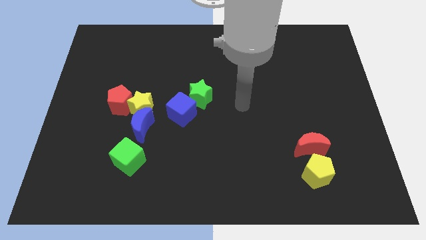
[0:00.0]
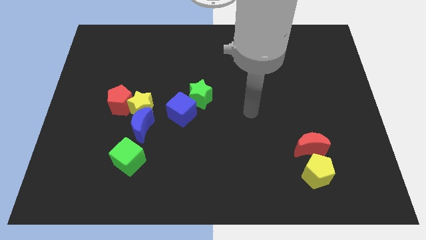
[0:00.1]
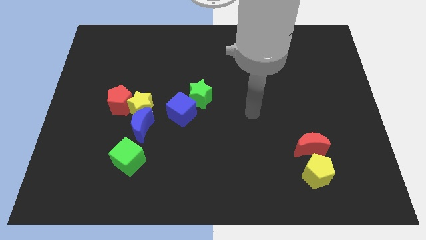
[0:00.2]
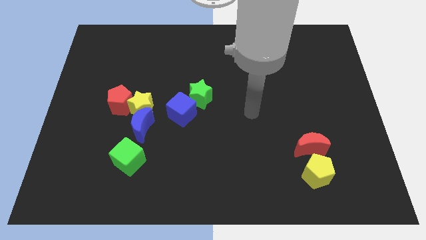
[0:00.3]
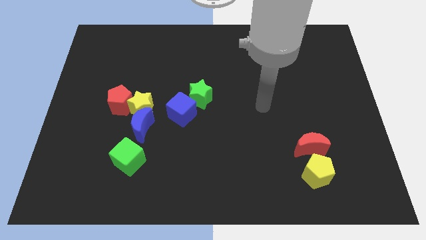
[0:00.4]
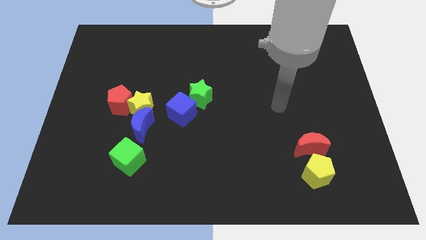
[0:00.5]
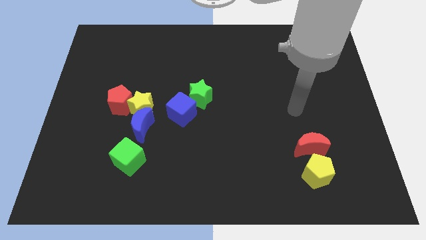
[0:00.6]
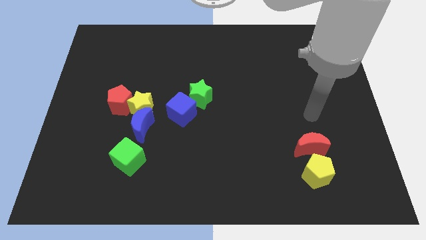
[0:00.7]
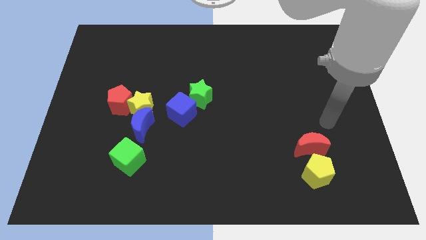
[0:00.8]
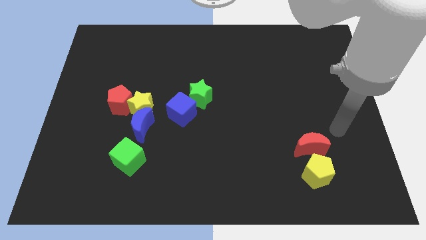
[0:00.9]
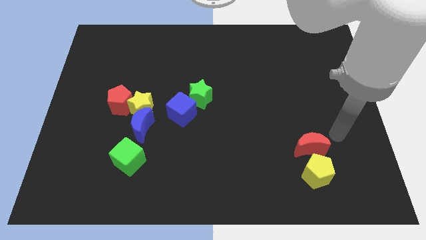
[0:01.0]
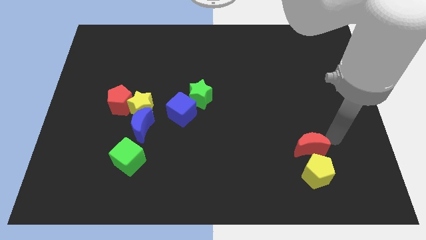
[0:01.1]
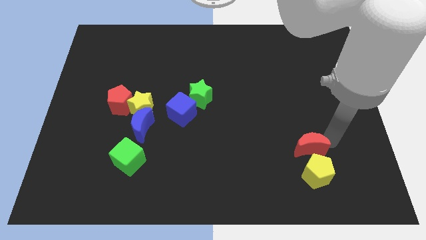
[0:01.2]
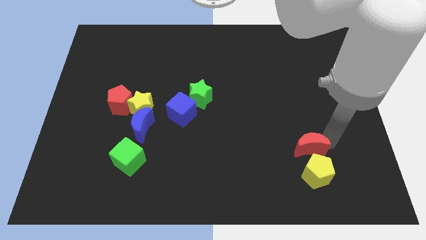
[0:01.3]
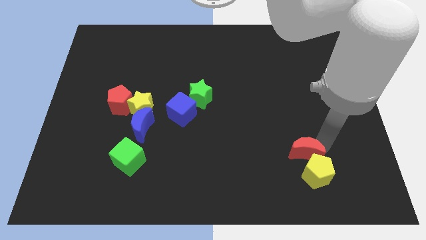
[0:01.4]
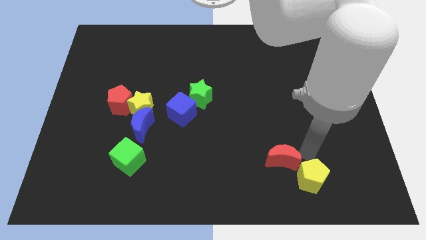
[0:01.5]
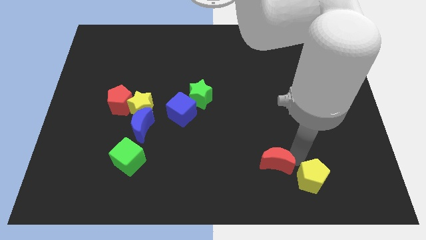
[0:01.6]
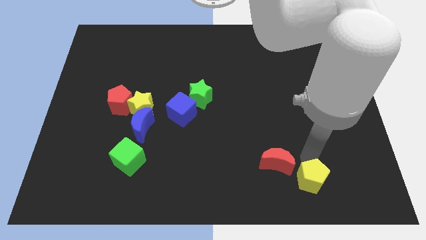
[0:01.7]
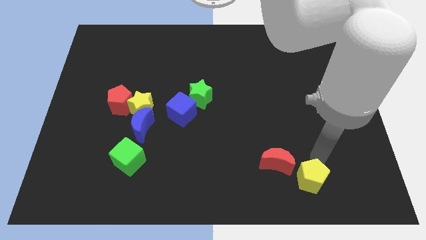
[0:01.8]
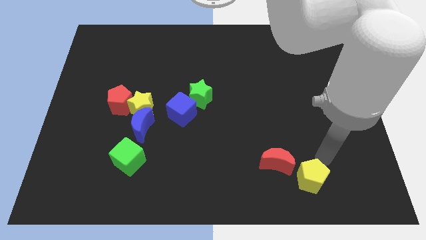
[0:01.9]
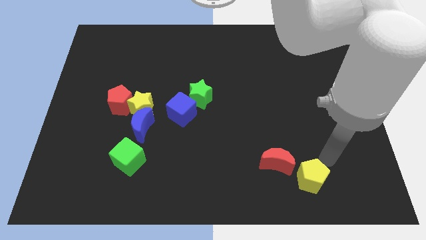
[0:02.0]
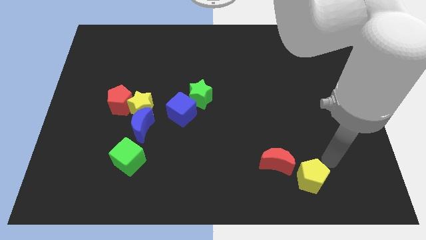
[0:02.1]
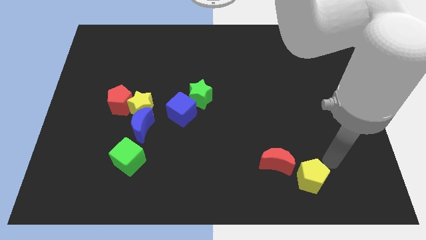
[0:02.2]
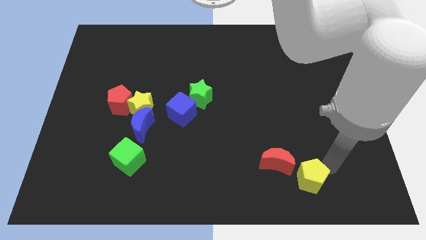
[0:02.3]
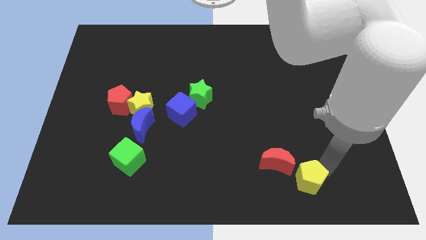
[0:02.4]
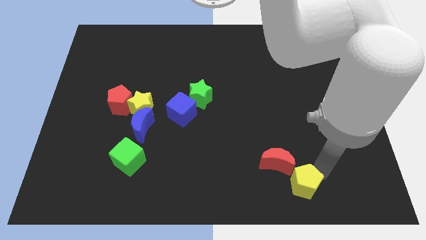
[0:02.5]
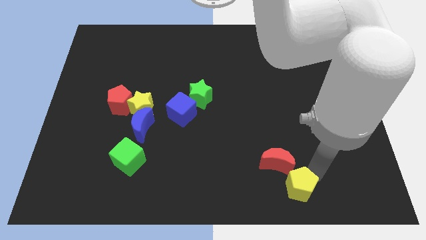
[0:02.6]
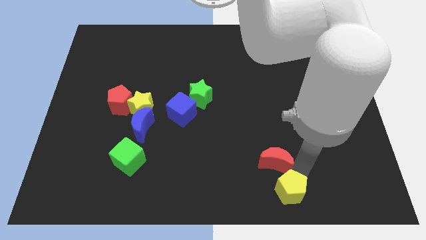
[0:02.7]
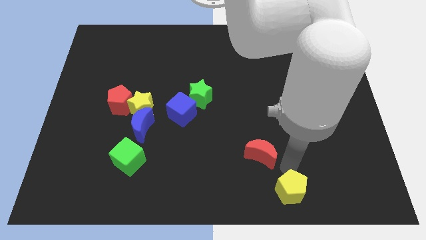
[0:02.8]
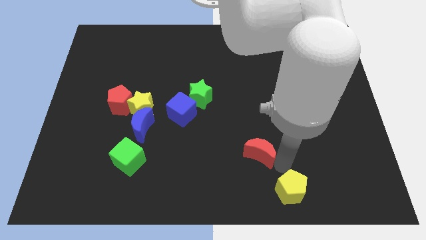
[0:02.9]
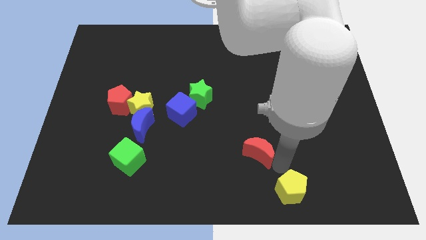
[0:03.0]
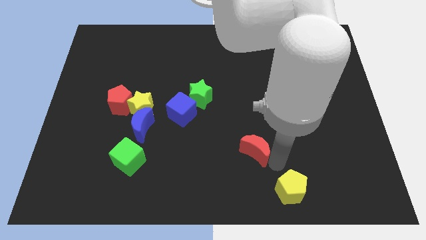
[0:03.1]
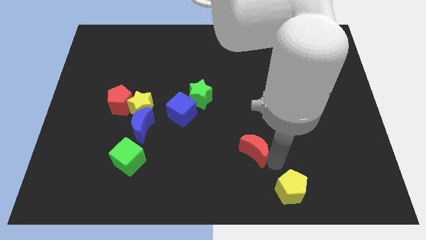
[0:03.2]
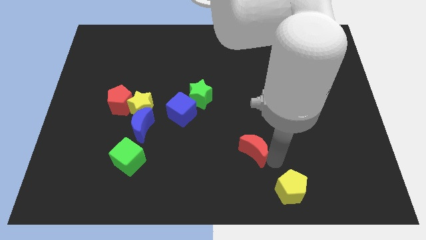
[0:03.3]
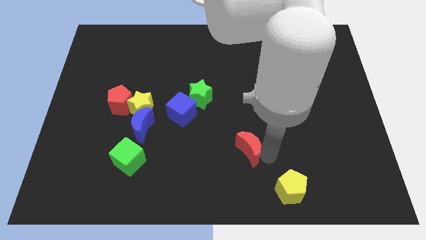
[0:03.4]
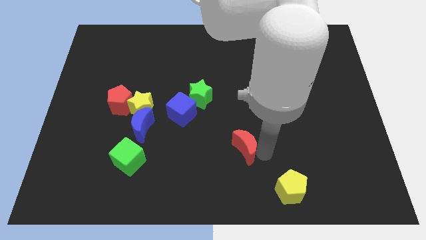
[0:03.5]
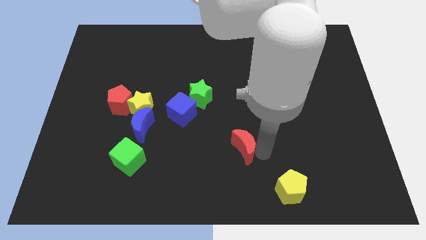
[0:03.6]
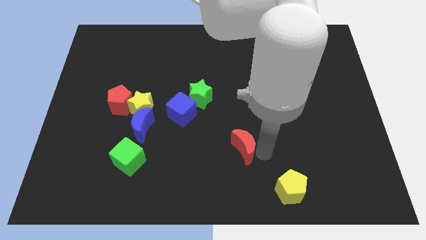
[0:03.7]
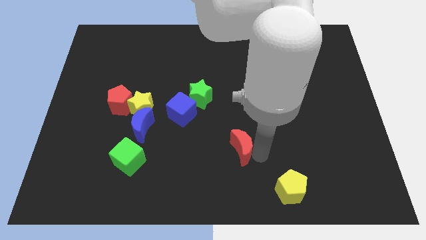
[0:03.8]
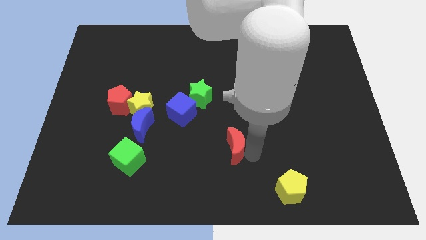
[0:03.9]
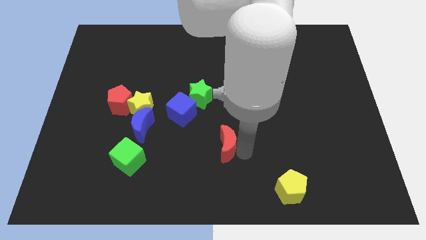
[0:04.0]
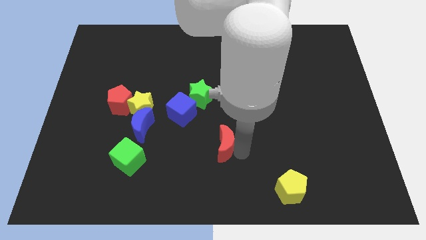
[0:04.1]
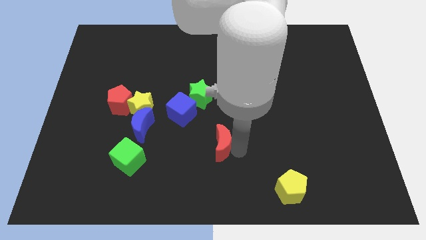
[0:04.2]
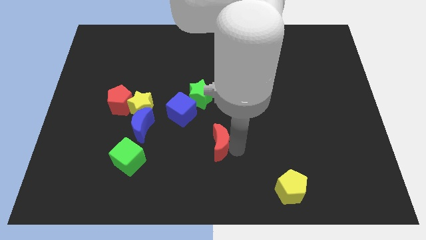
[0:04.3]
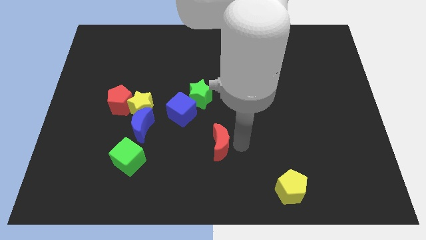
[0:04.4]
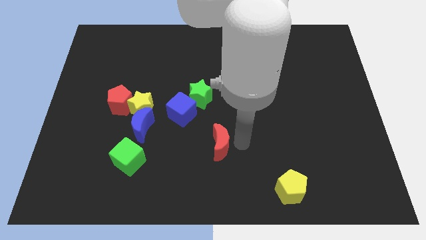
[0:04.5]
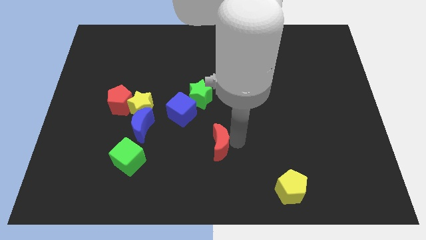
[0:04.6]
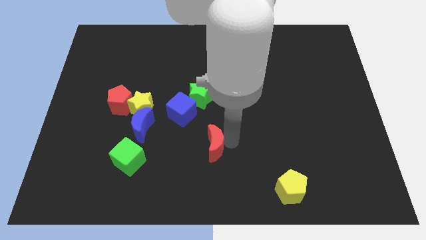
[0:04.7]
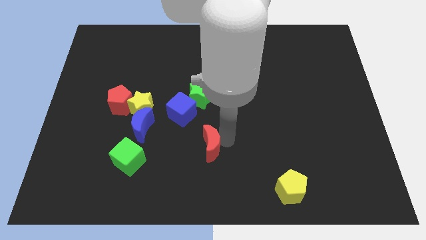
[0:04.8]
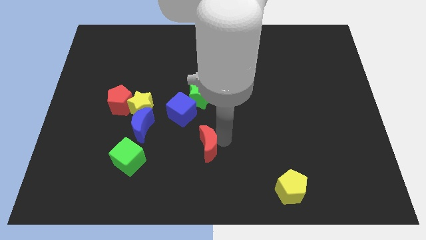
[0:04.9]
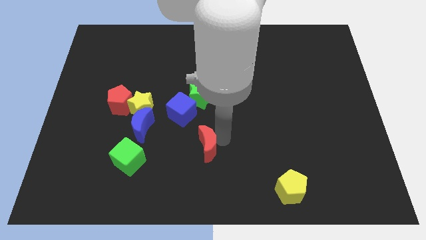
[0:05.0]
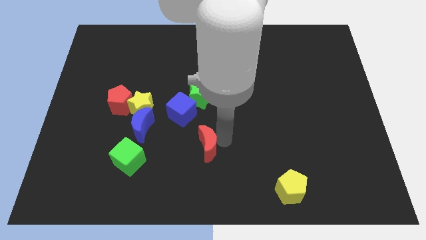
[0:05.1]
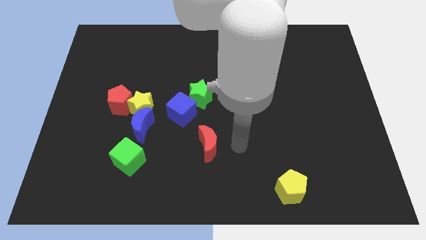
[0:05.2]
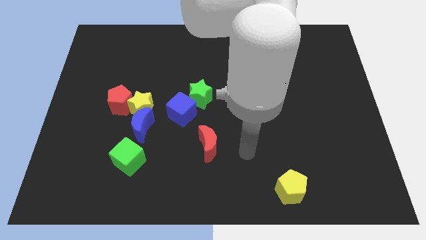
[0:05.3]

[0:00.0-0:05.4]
drag red moon towards the right of the blue crescent

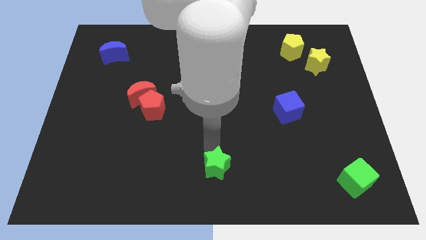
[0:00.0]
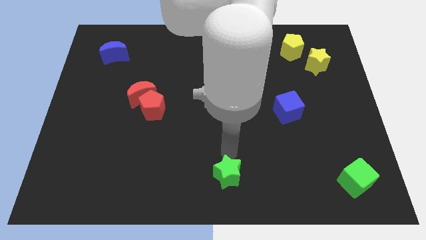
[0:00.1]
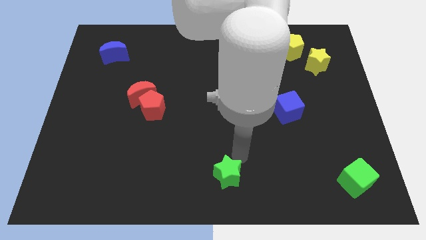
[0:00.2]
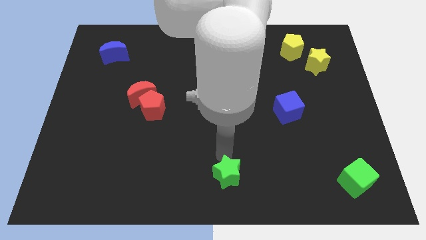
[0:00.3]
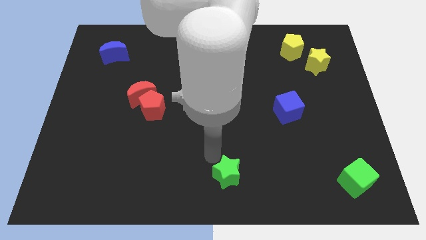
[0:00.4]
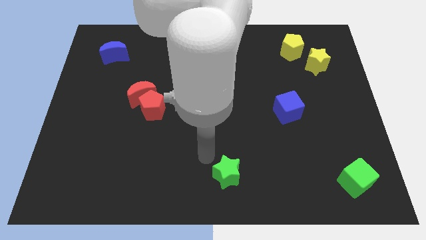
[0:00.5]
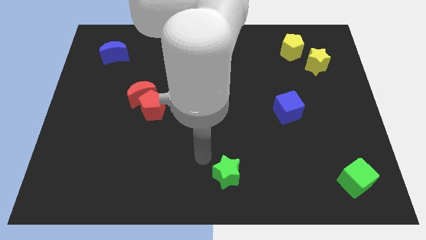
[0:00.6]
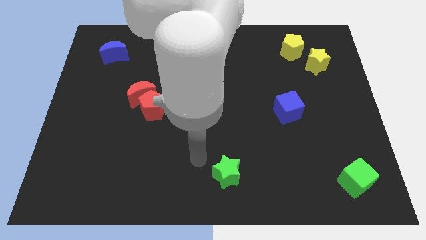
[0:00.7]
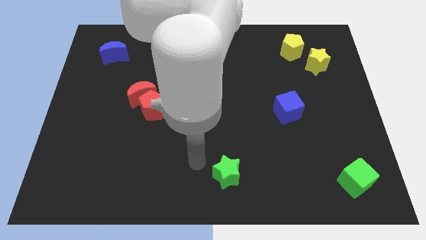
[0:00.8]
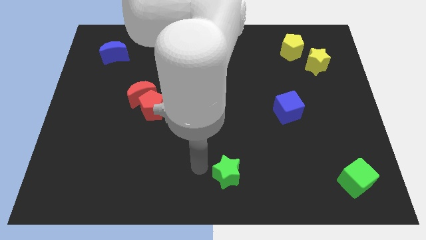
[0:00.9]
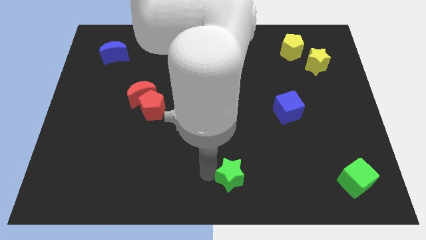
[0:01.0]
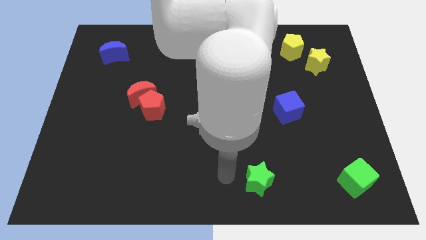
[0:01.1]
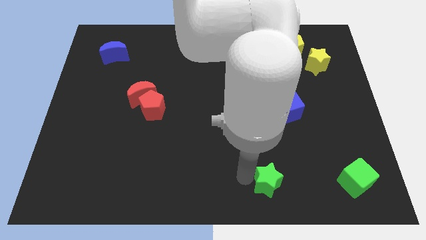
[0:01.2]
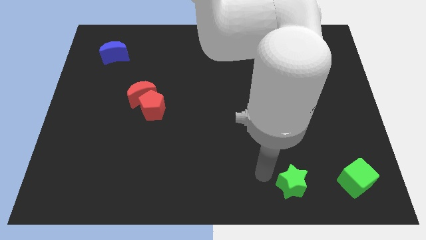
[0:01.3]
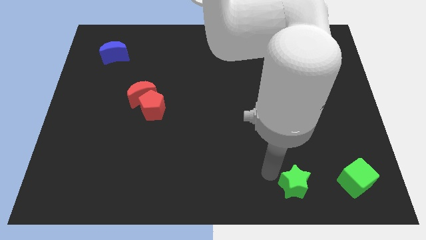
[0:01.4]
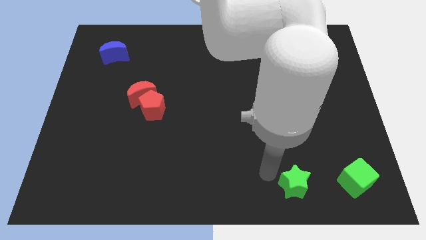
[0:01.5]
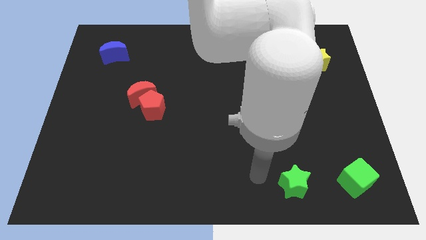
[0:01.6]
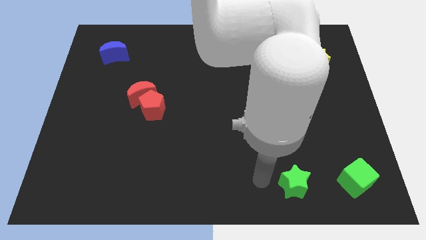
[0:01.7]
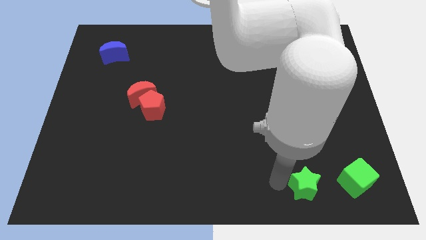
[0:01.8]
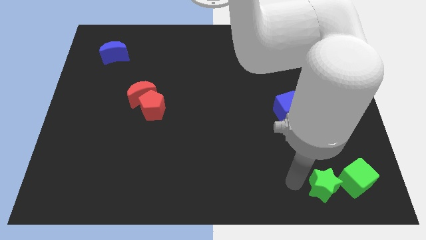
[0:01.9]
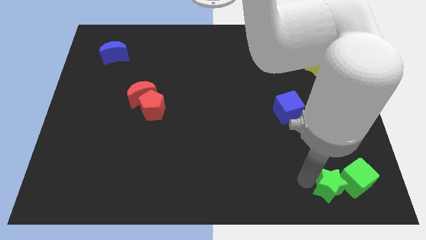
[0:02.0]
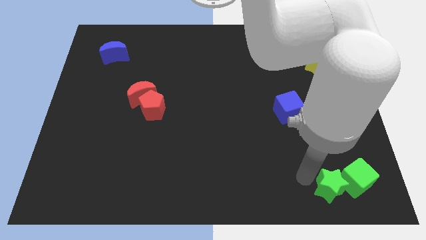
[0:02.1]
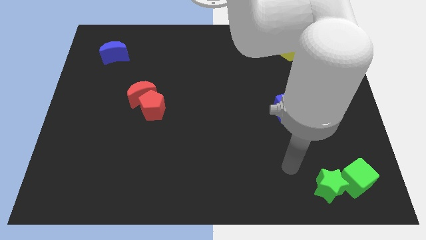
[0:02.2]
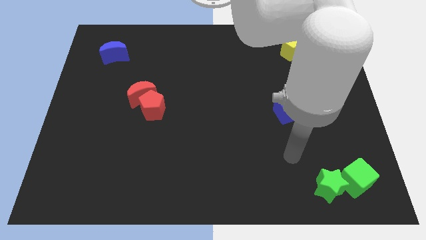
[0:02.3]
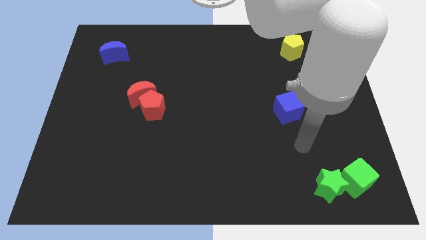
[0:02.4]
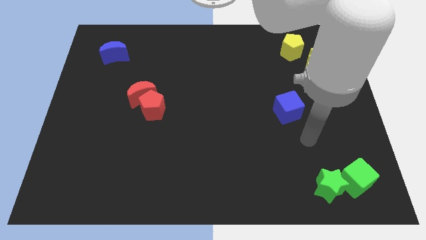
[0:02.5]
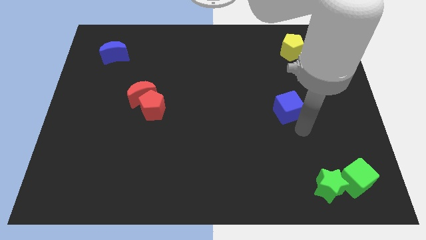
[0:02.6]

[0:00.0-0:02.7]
move green star close to green cube

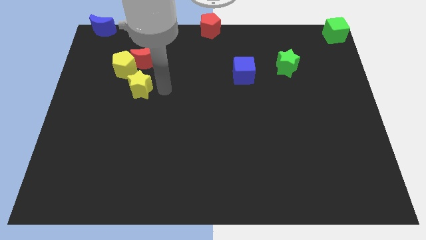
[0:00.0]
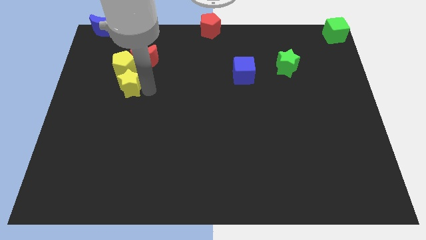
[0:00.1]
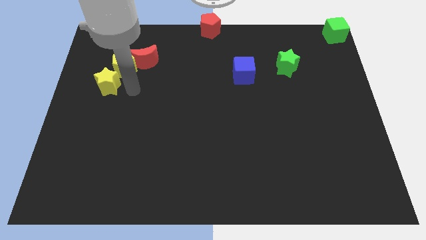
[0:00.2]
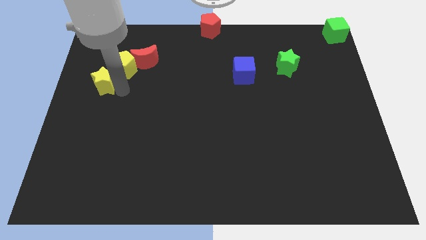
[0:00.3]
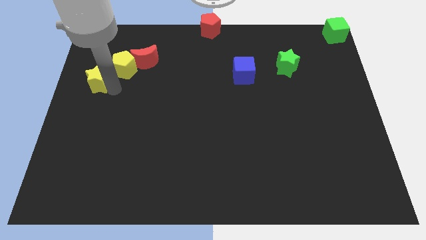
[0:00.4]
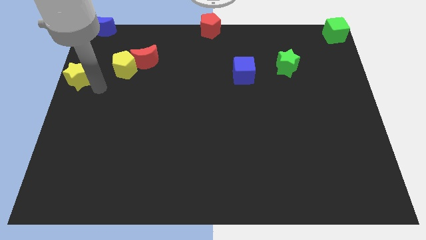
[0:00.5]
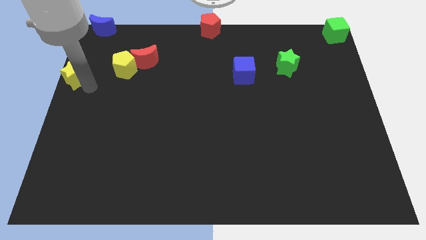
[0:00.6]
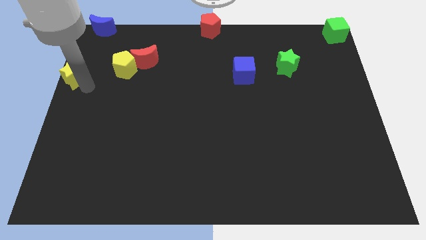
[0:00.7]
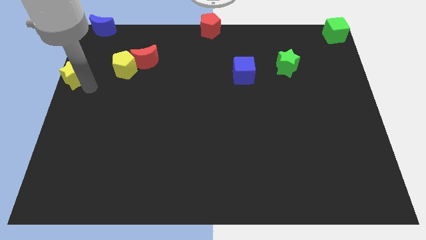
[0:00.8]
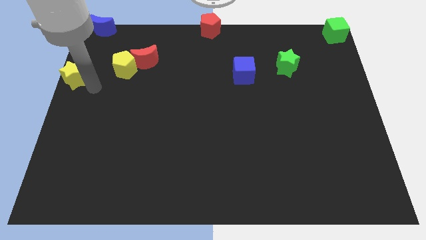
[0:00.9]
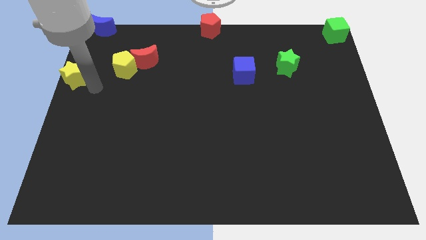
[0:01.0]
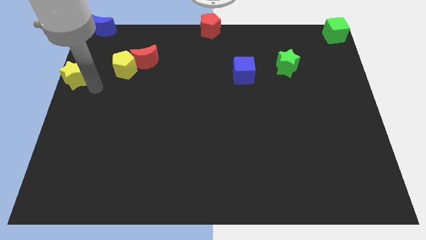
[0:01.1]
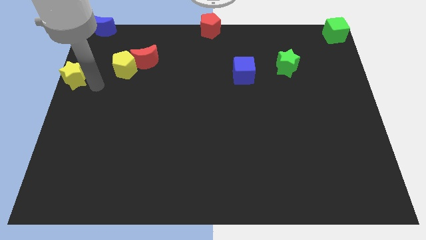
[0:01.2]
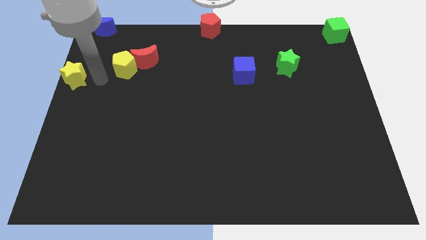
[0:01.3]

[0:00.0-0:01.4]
place the yellow star at the bottom left of the yellow pentagon
